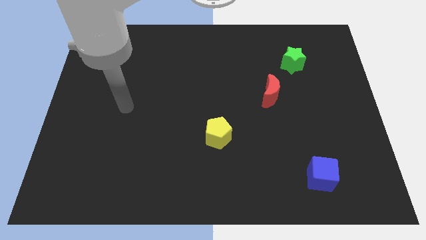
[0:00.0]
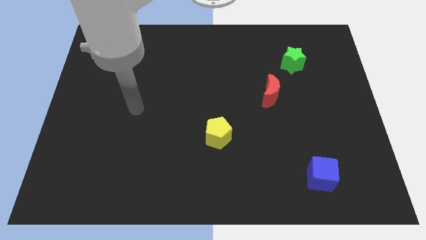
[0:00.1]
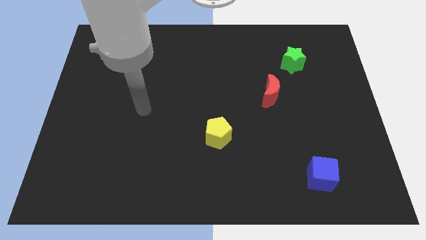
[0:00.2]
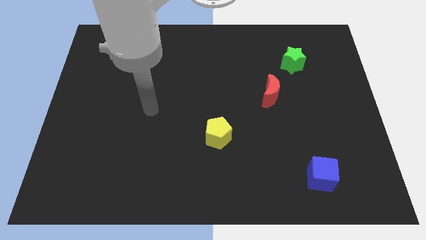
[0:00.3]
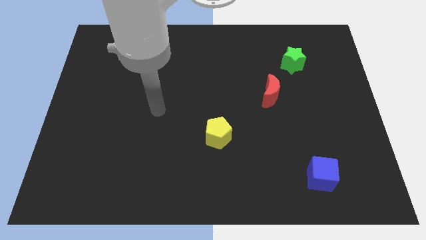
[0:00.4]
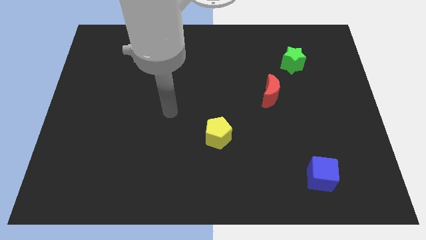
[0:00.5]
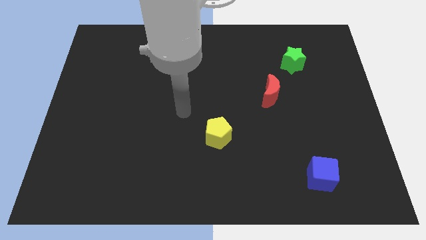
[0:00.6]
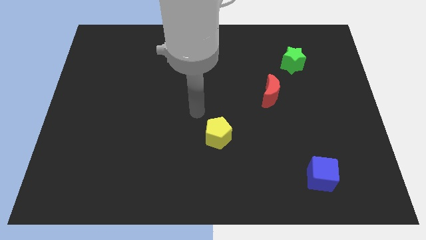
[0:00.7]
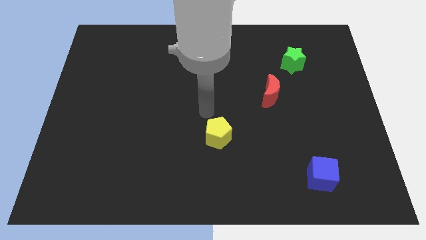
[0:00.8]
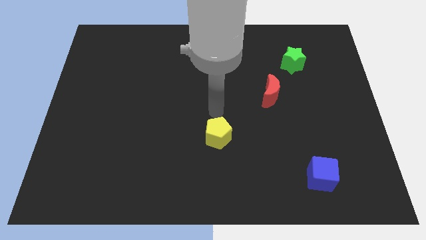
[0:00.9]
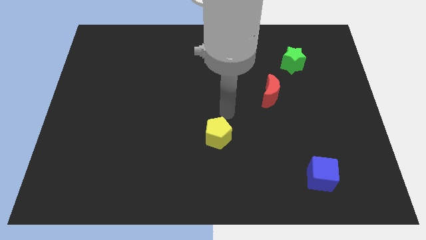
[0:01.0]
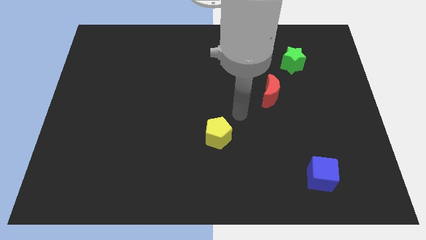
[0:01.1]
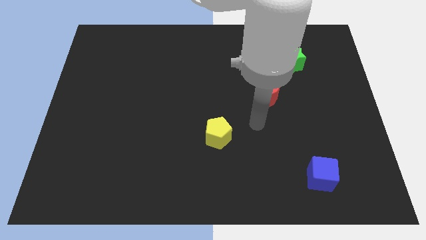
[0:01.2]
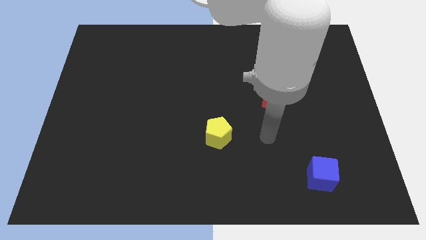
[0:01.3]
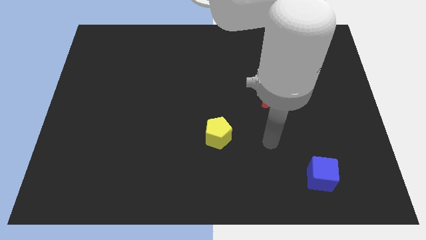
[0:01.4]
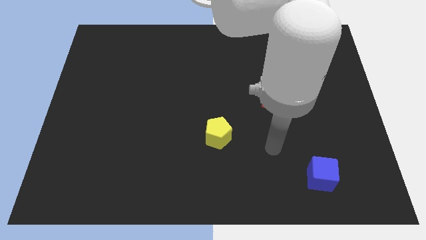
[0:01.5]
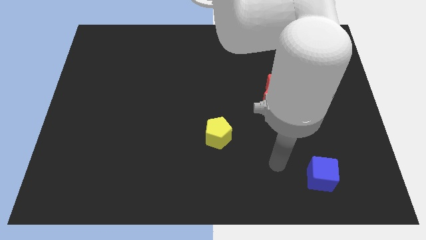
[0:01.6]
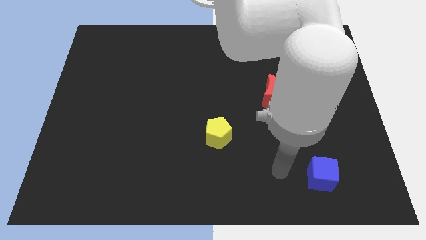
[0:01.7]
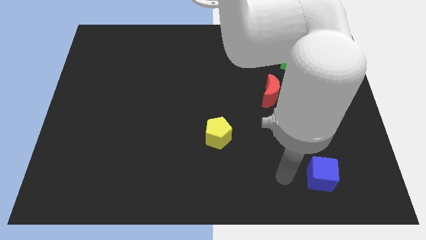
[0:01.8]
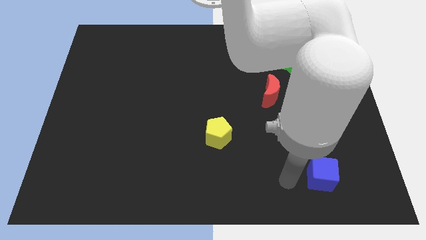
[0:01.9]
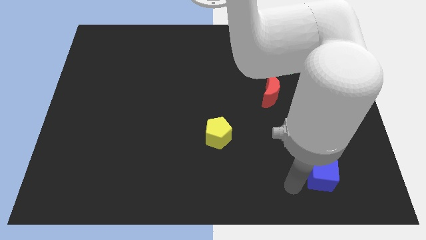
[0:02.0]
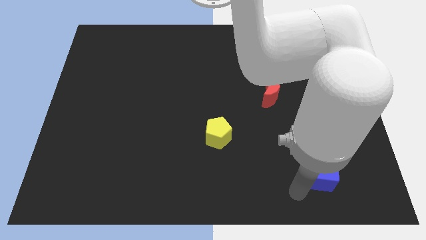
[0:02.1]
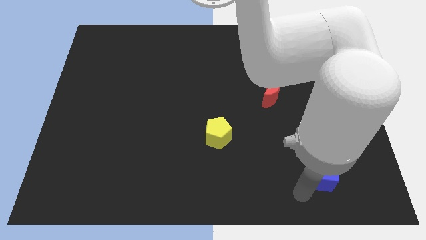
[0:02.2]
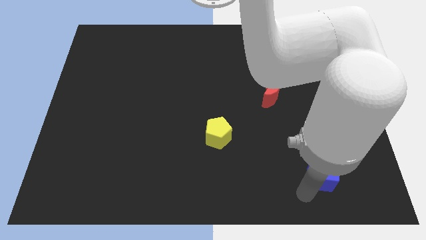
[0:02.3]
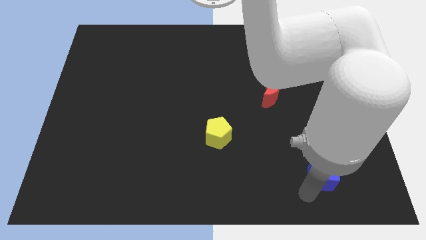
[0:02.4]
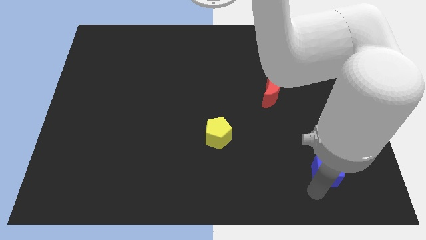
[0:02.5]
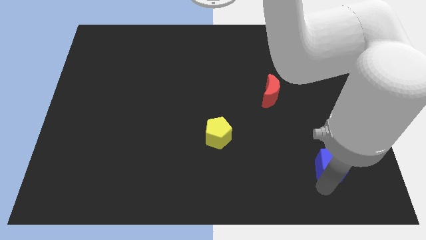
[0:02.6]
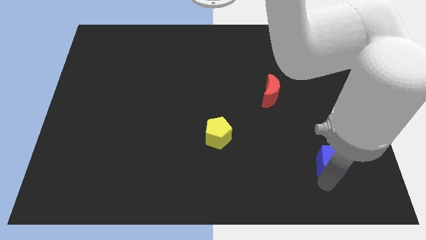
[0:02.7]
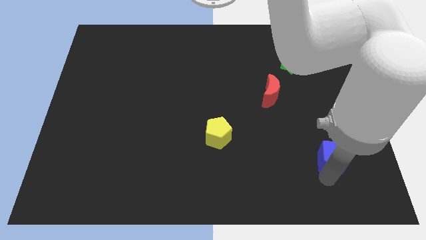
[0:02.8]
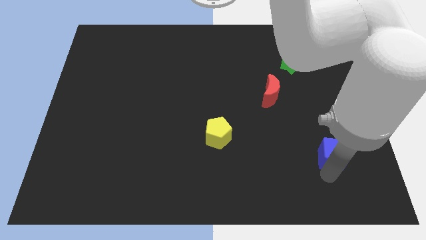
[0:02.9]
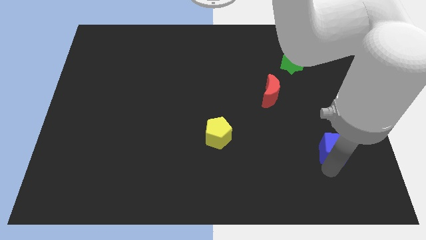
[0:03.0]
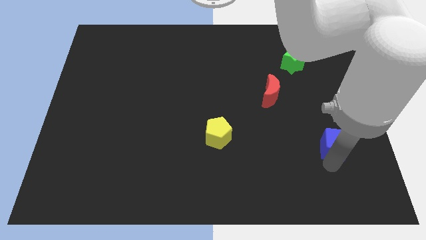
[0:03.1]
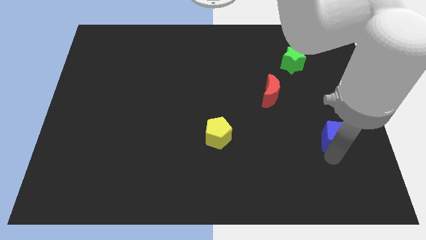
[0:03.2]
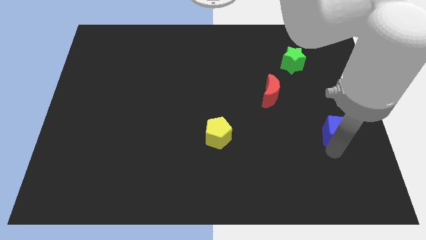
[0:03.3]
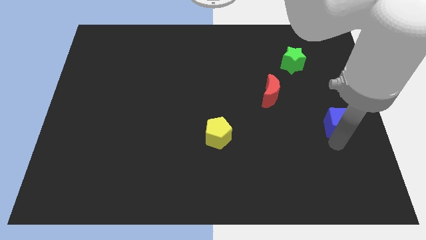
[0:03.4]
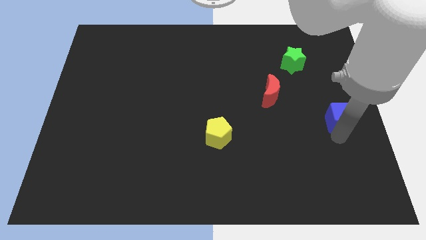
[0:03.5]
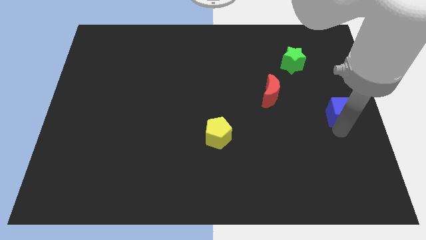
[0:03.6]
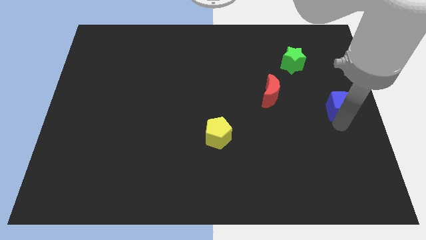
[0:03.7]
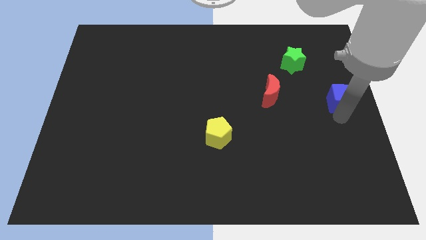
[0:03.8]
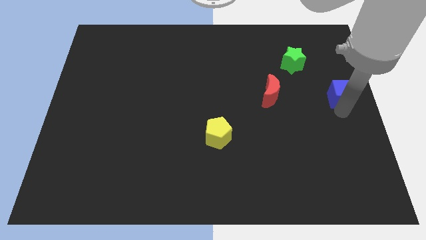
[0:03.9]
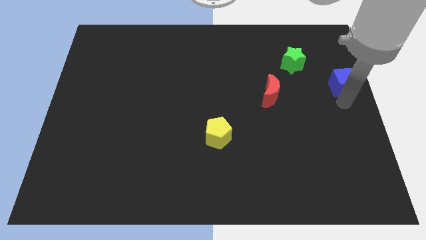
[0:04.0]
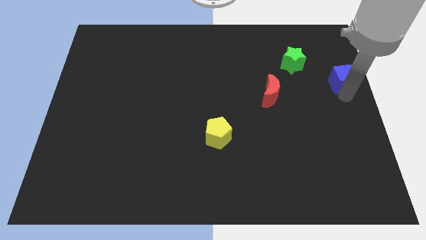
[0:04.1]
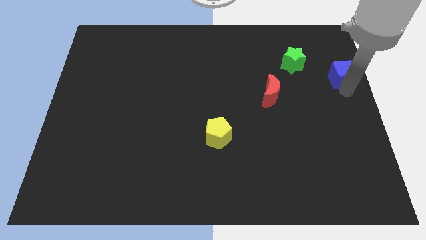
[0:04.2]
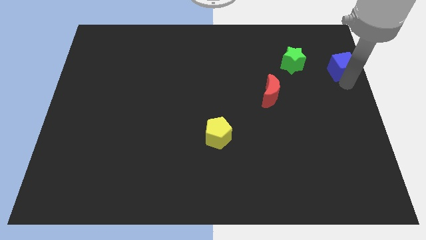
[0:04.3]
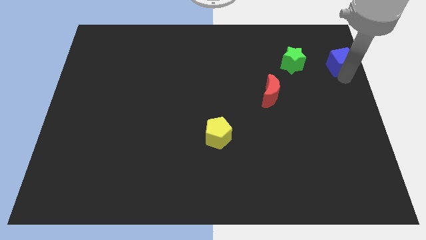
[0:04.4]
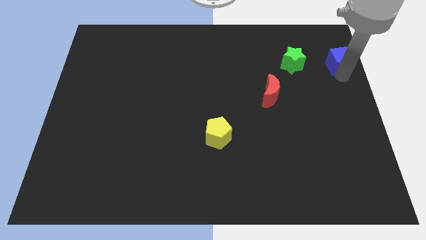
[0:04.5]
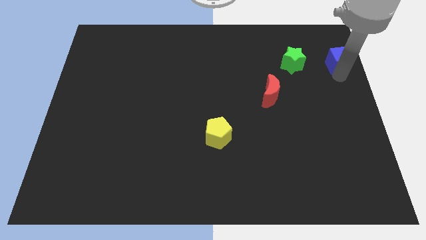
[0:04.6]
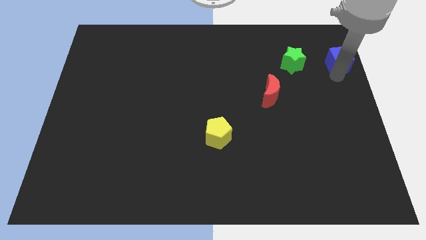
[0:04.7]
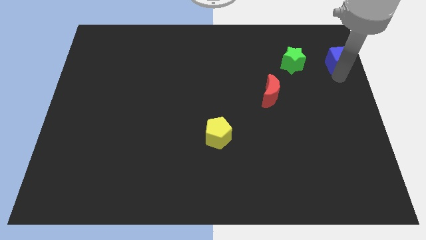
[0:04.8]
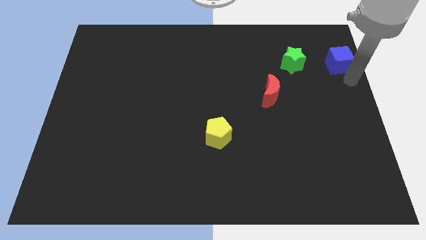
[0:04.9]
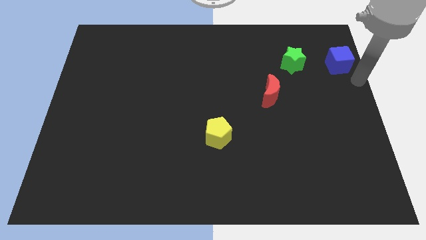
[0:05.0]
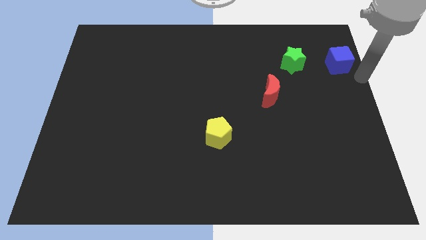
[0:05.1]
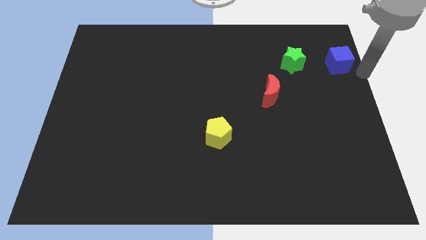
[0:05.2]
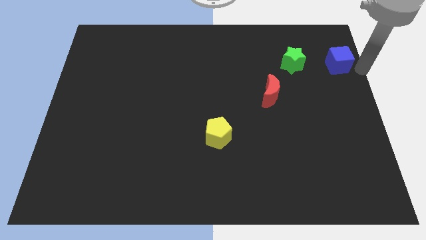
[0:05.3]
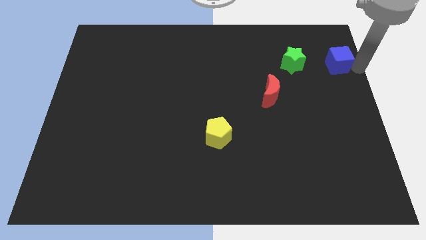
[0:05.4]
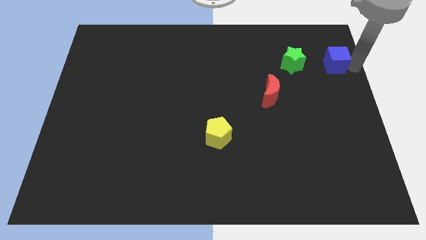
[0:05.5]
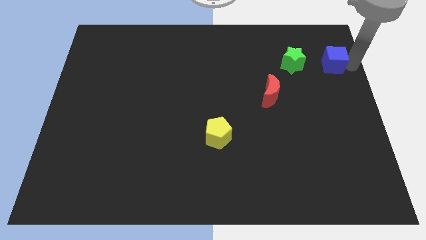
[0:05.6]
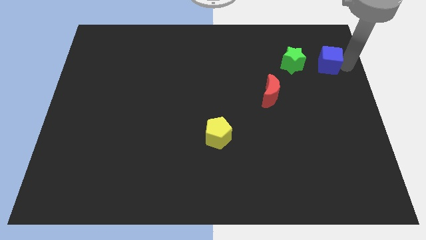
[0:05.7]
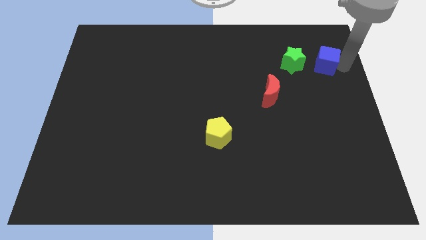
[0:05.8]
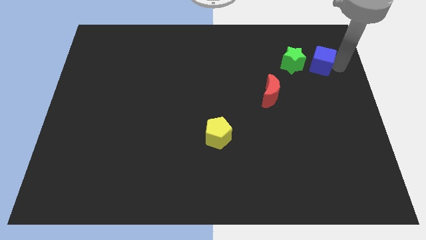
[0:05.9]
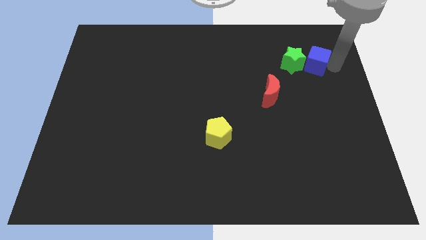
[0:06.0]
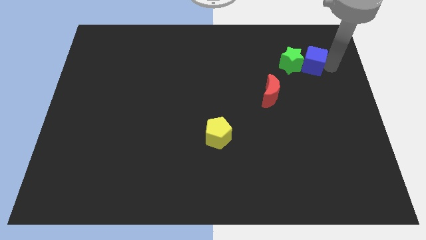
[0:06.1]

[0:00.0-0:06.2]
put the blue block to the green block

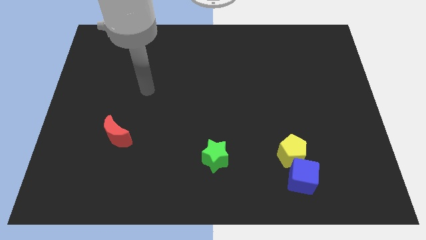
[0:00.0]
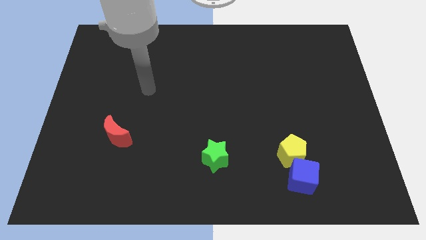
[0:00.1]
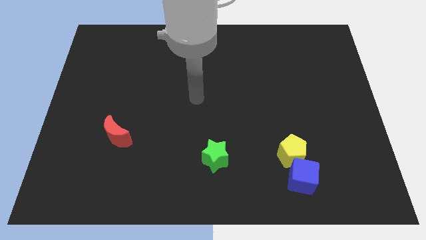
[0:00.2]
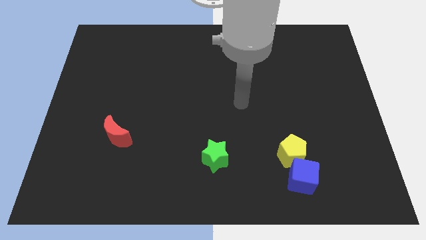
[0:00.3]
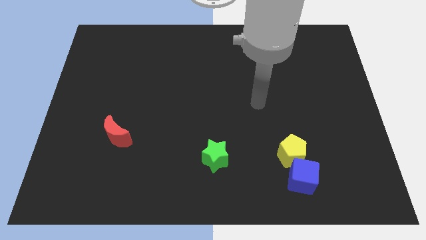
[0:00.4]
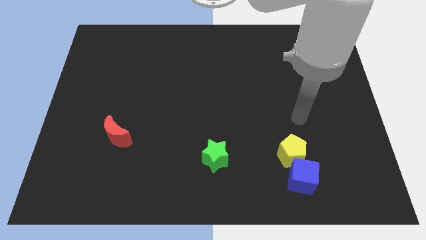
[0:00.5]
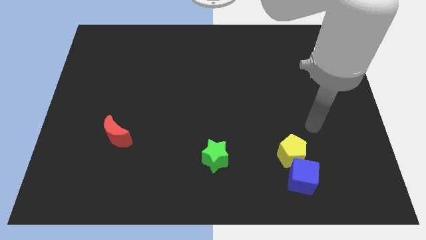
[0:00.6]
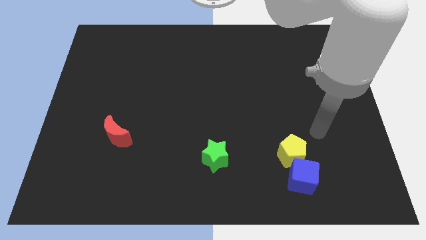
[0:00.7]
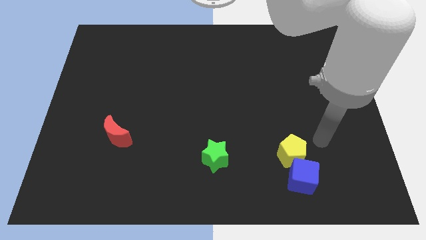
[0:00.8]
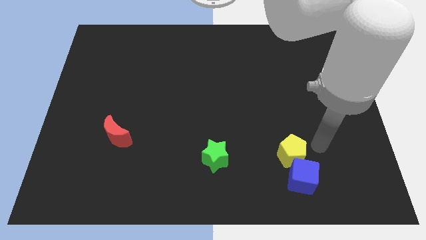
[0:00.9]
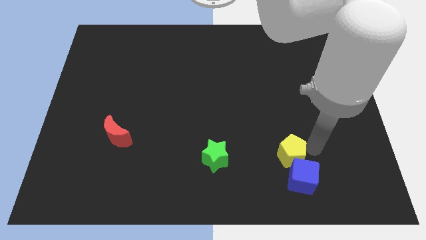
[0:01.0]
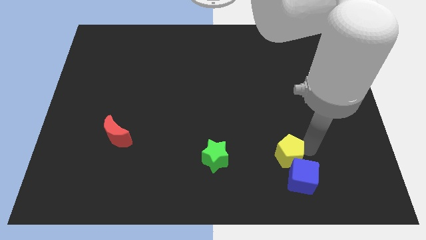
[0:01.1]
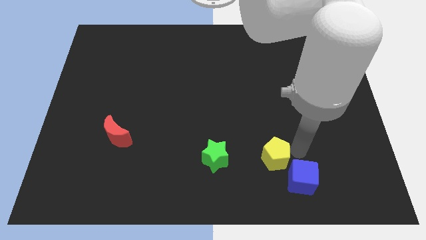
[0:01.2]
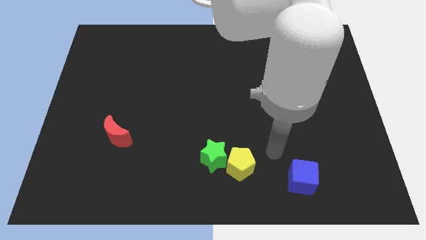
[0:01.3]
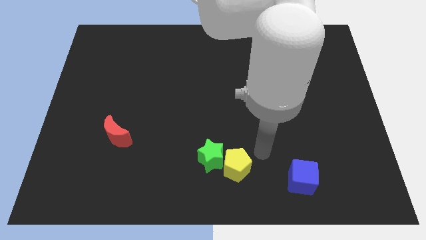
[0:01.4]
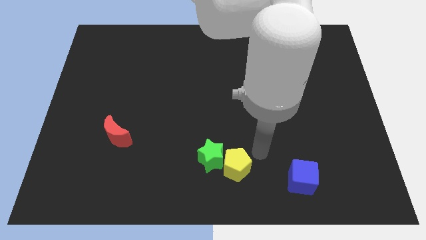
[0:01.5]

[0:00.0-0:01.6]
put the yellow block to the green block

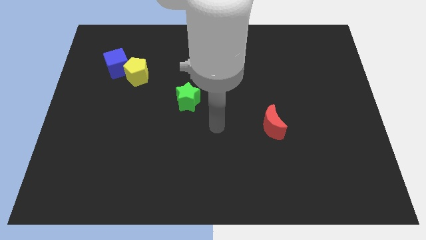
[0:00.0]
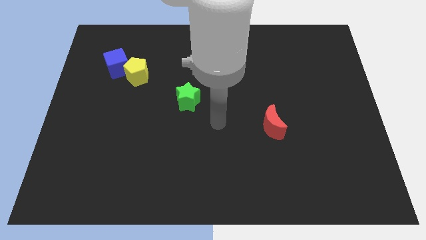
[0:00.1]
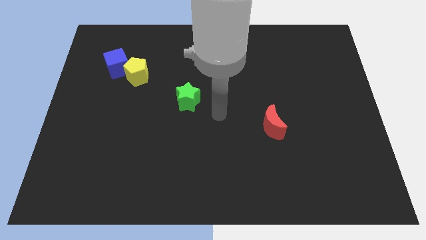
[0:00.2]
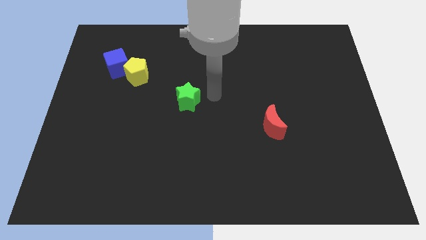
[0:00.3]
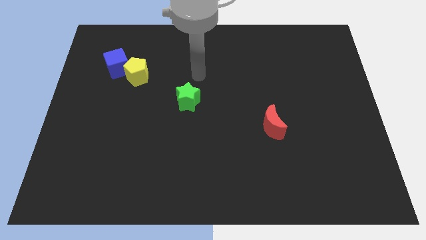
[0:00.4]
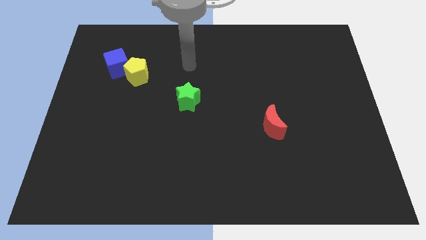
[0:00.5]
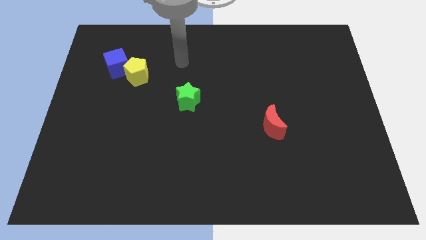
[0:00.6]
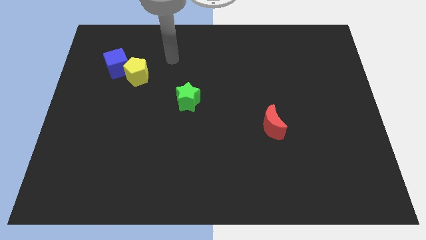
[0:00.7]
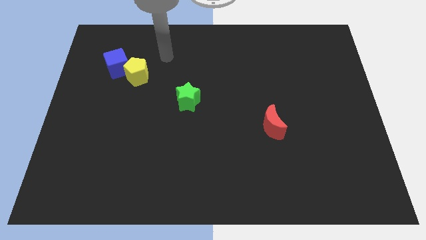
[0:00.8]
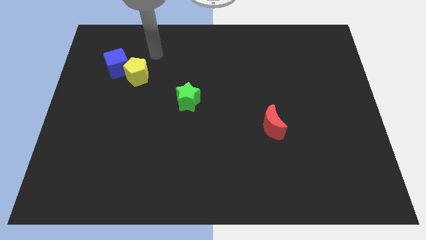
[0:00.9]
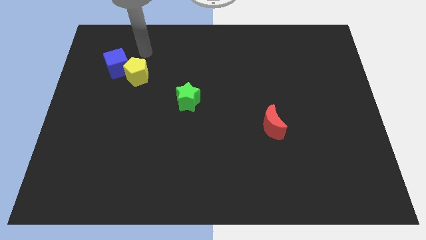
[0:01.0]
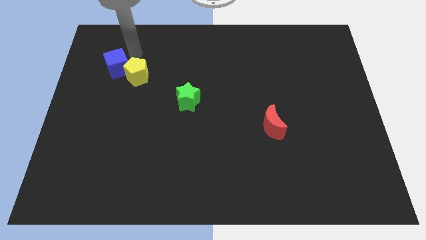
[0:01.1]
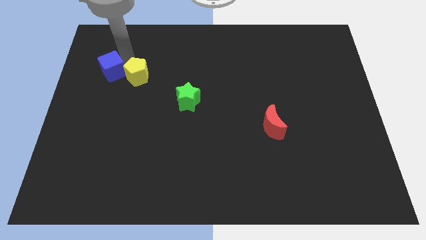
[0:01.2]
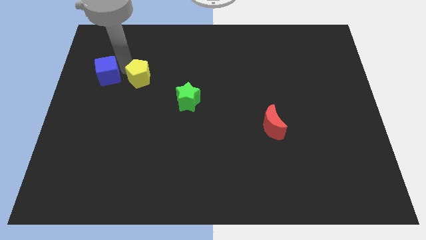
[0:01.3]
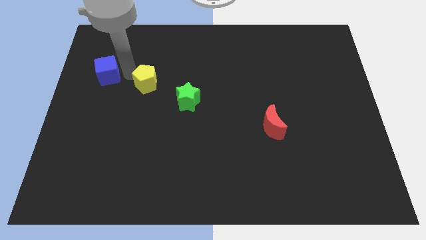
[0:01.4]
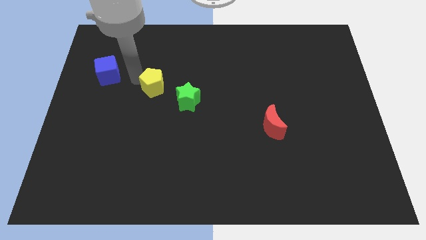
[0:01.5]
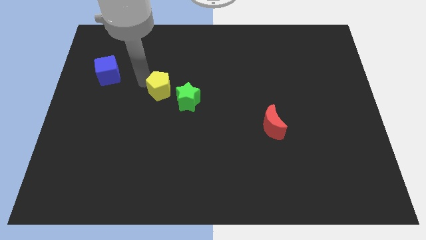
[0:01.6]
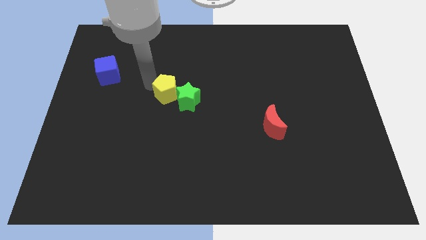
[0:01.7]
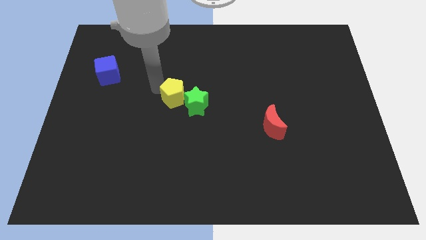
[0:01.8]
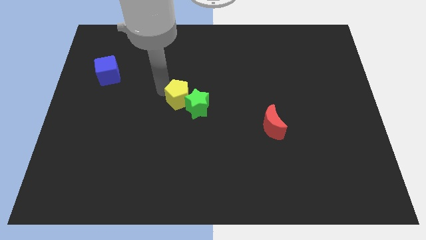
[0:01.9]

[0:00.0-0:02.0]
push the yellow block towards the green star
